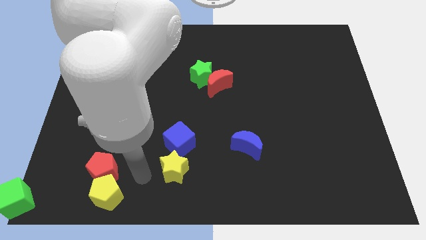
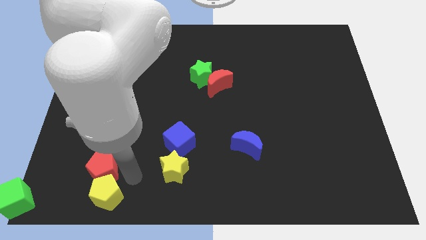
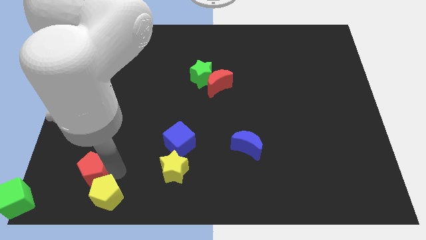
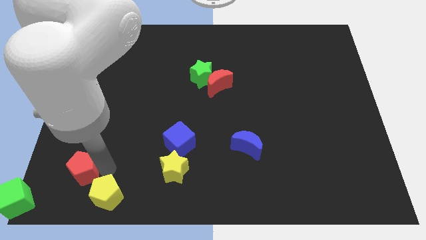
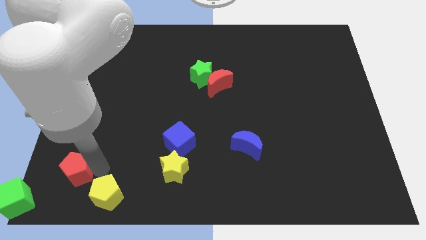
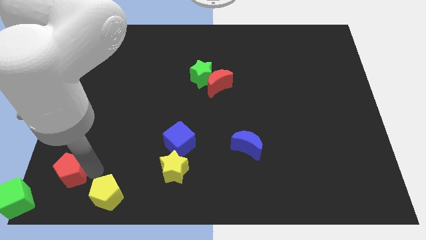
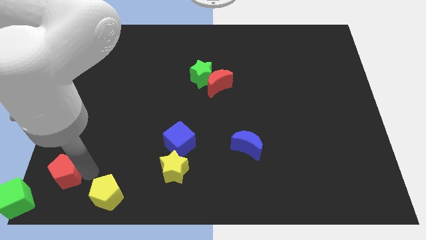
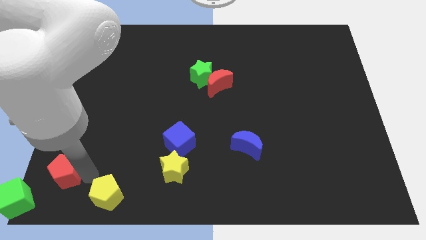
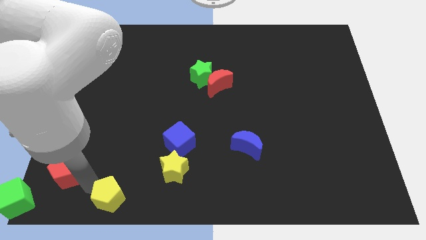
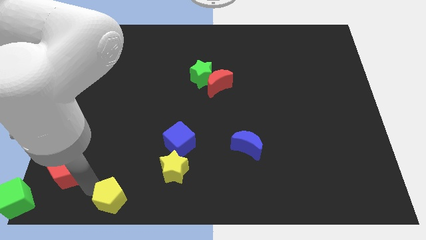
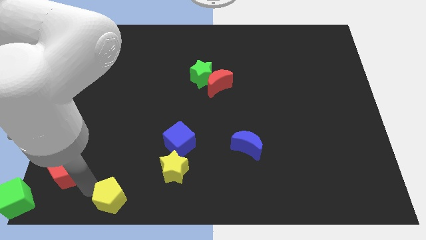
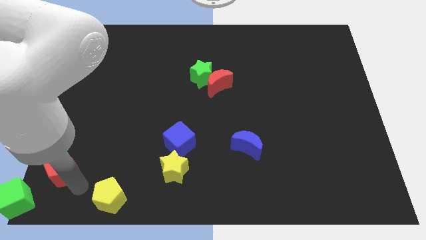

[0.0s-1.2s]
separate the red and yellow pentagons

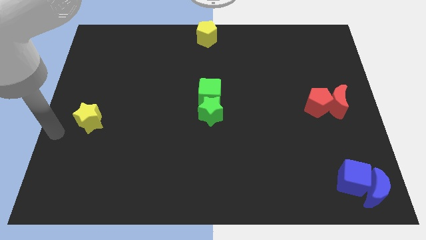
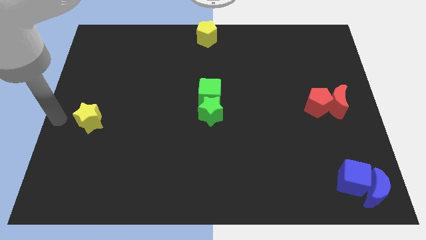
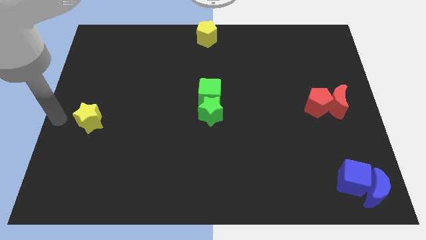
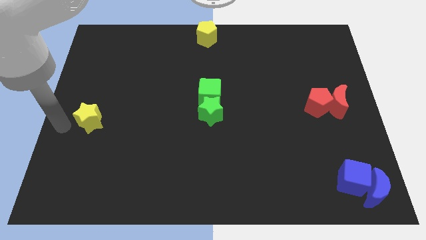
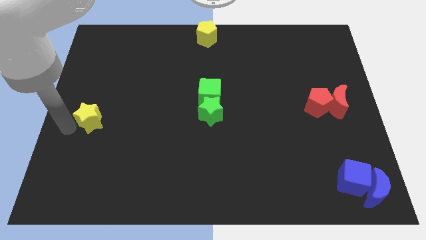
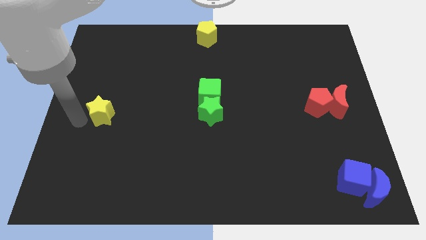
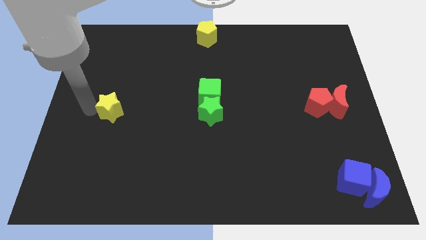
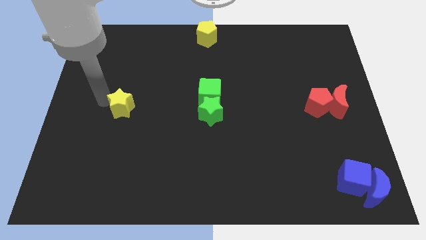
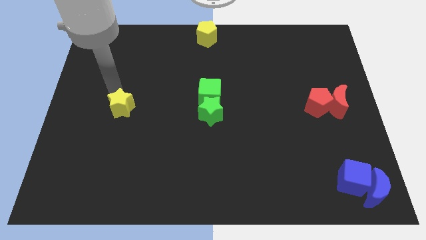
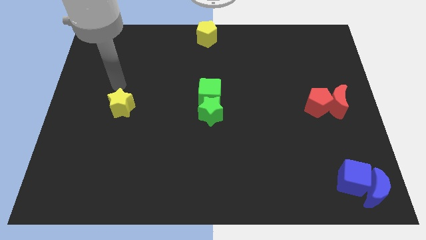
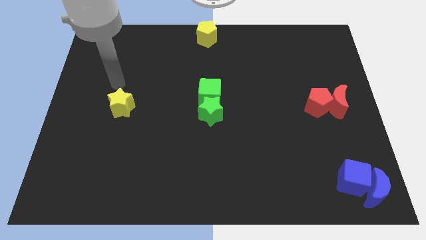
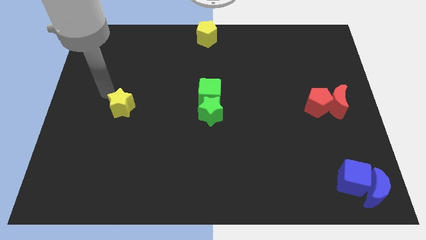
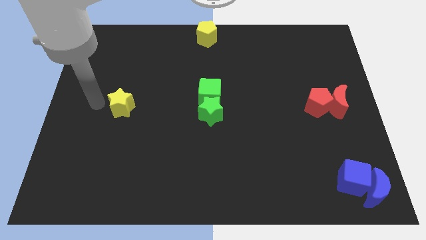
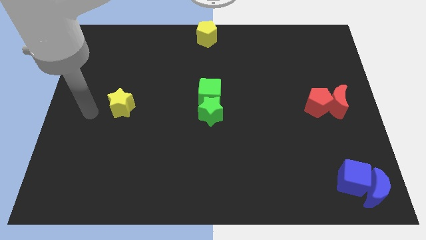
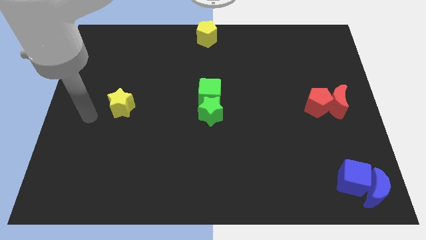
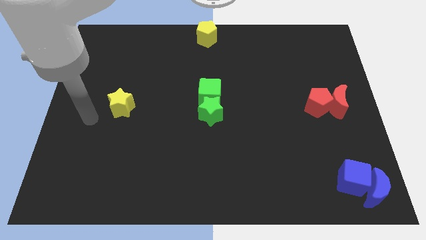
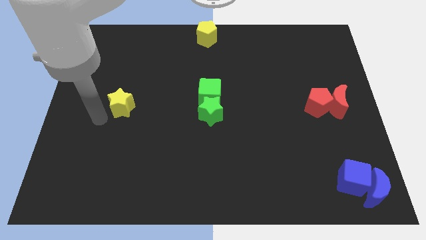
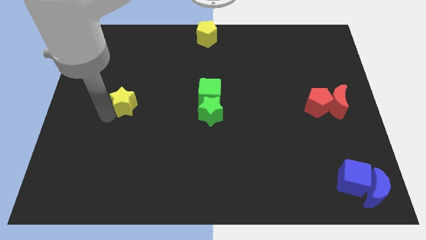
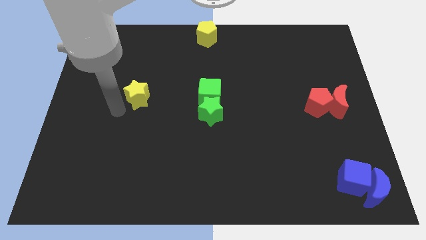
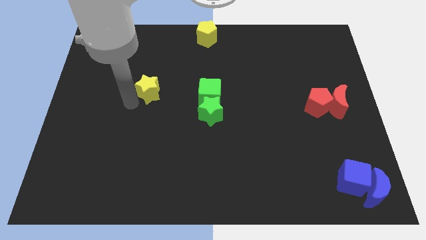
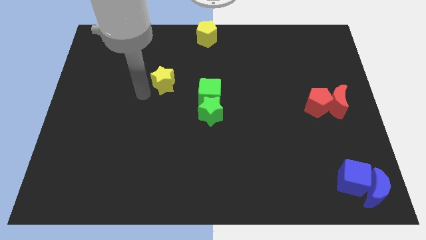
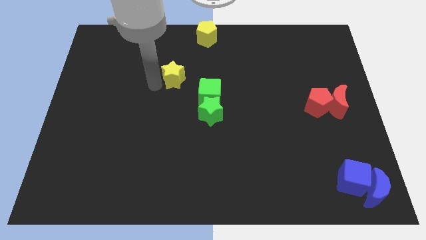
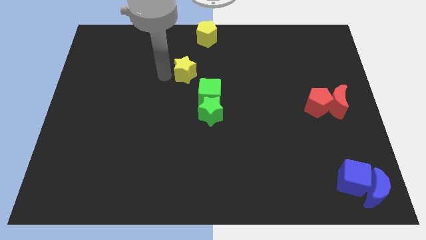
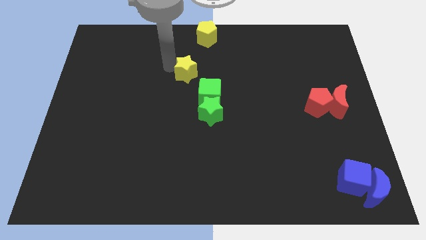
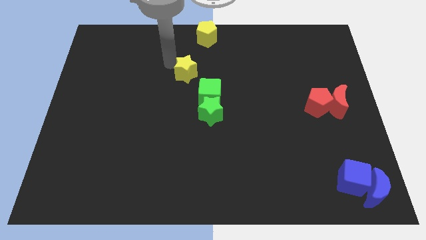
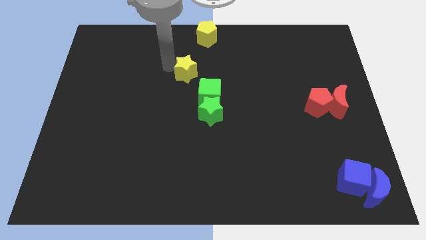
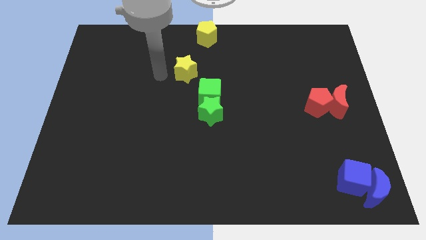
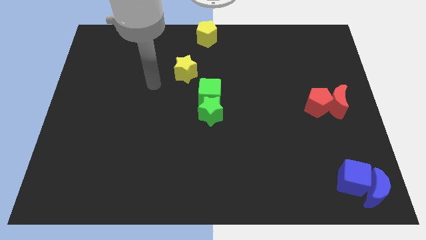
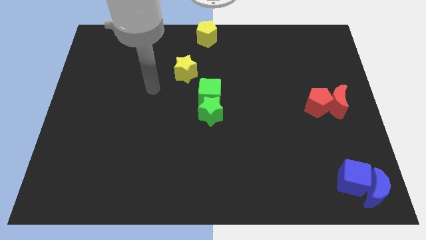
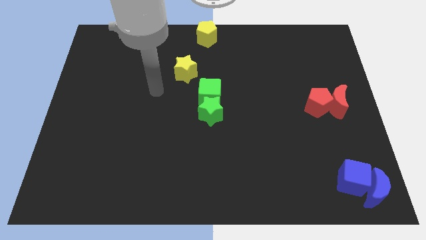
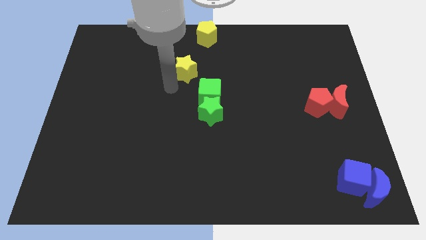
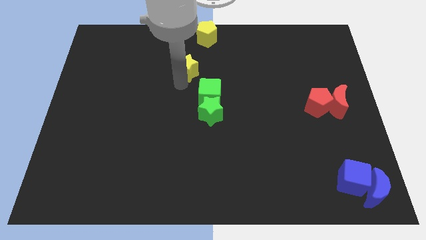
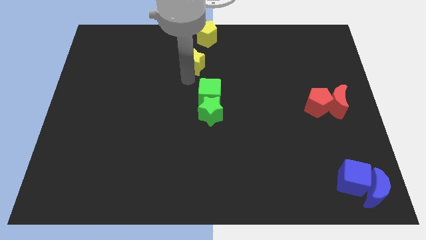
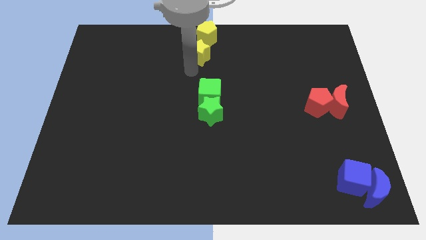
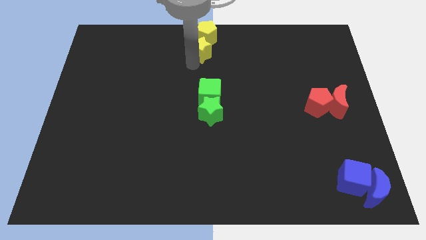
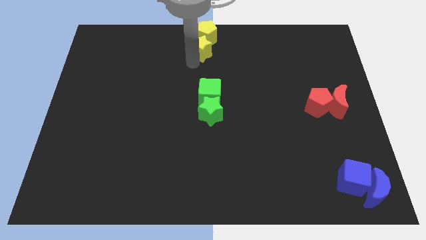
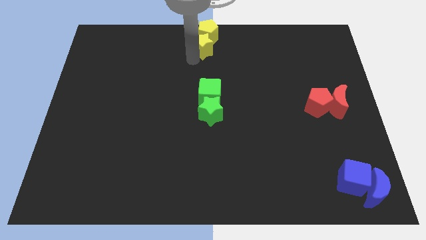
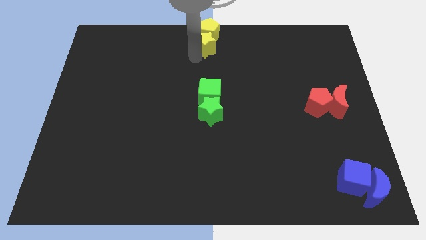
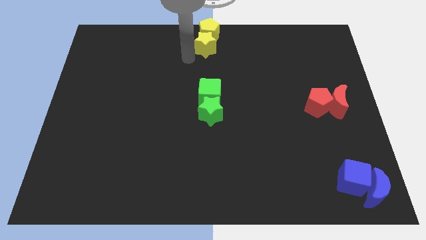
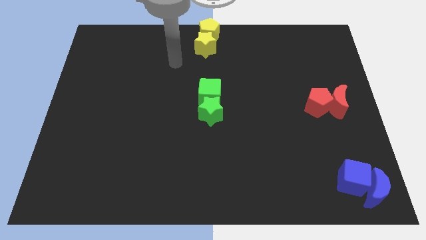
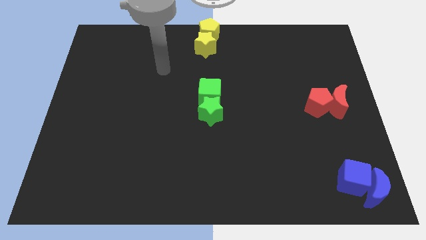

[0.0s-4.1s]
move the yellow star towards the yellow pentagon

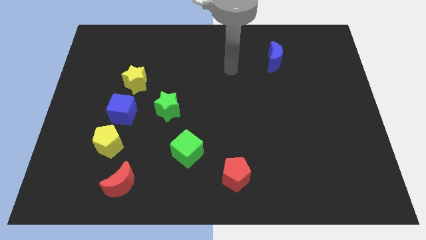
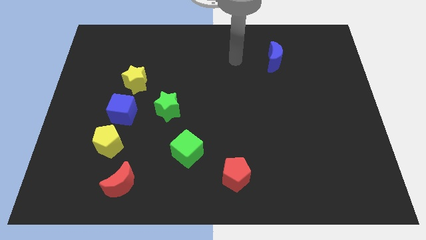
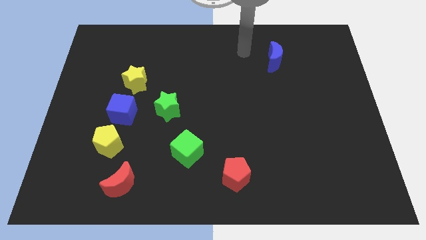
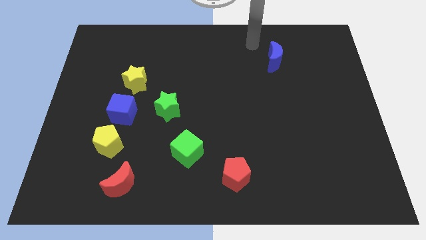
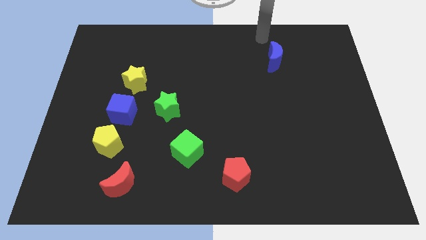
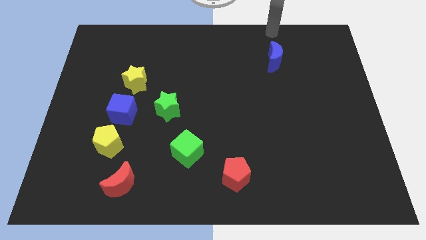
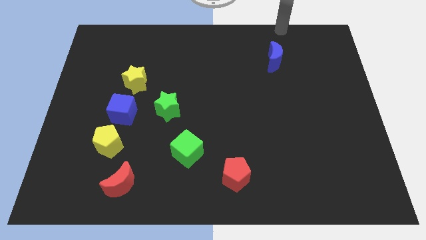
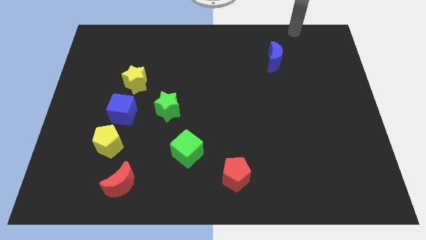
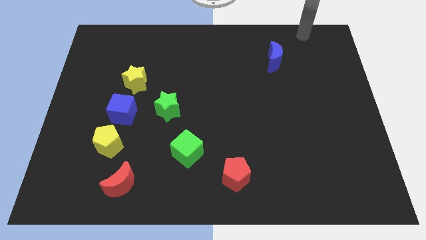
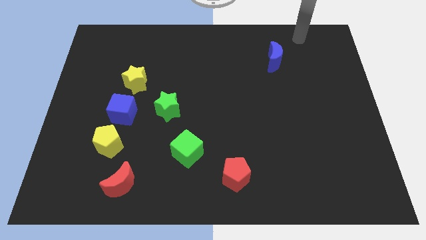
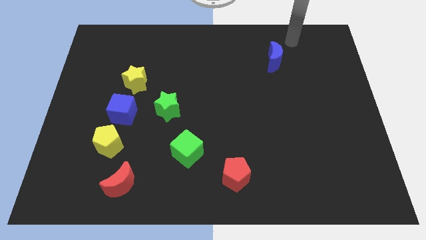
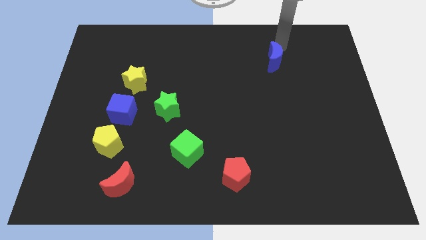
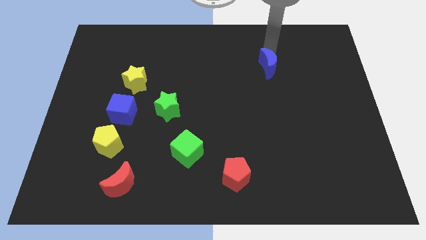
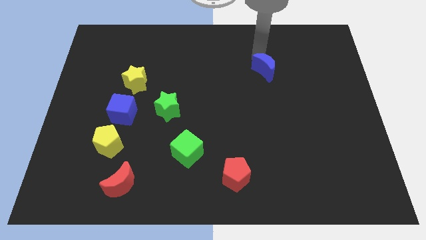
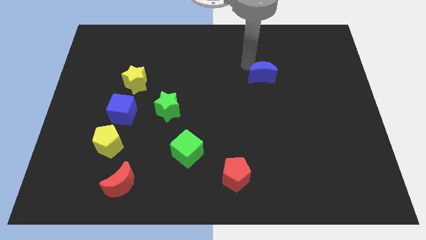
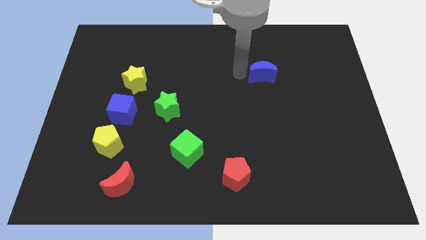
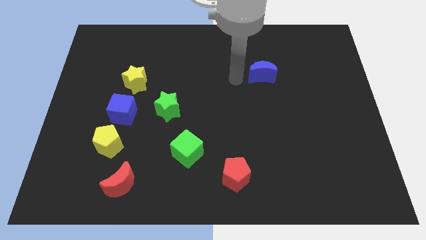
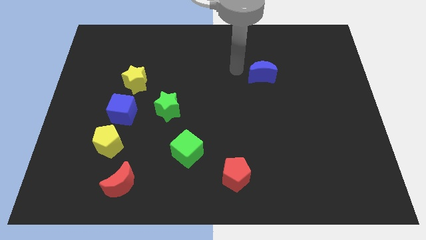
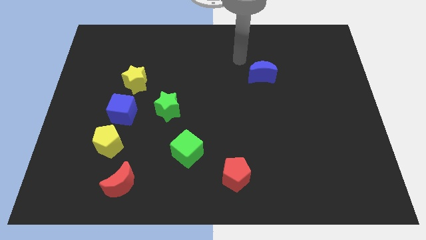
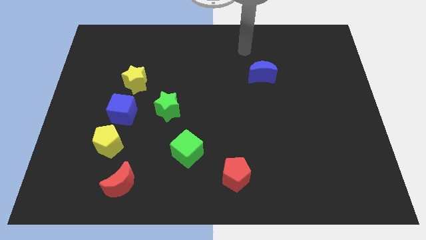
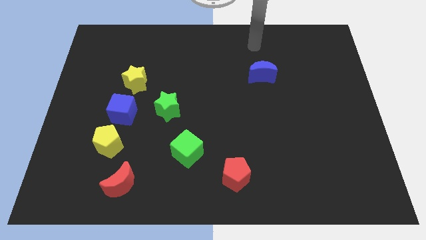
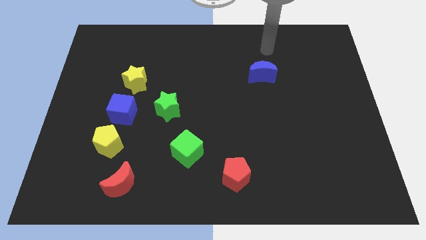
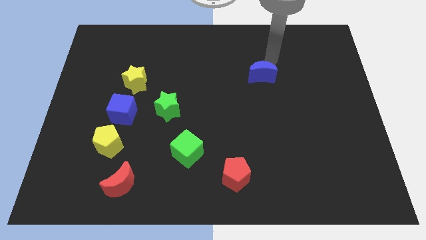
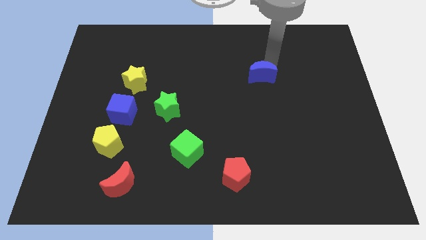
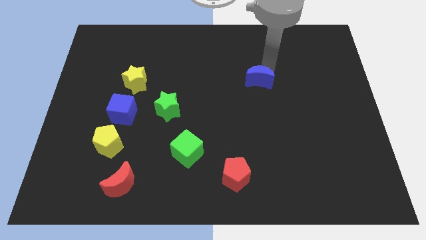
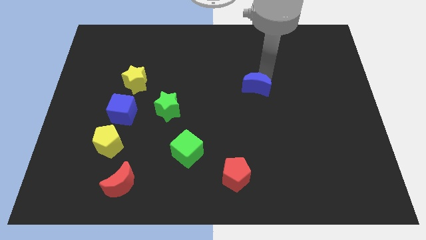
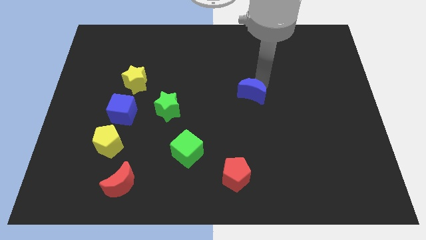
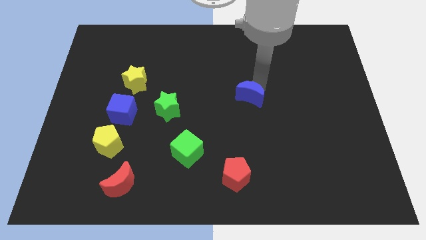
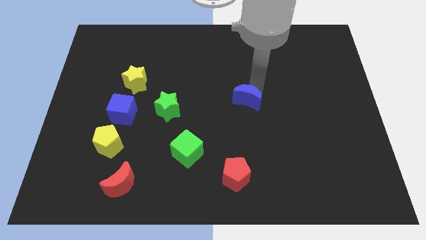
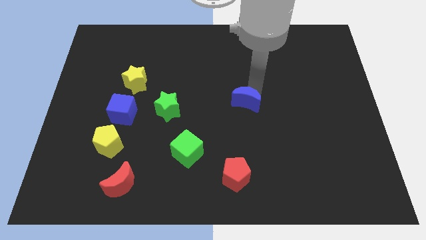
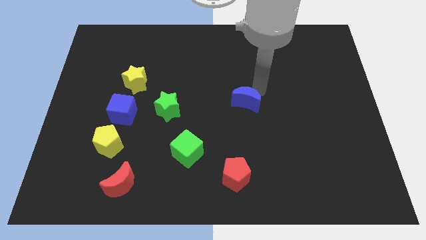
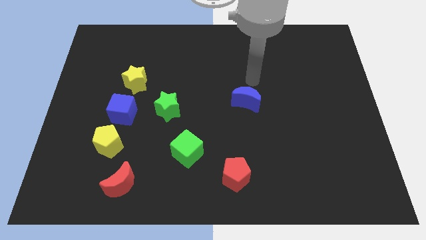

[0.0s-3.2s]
push blue crescent above red pentagon

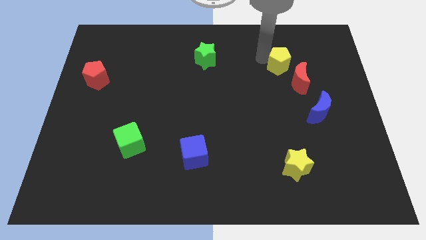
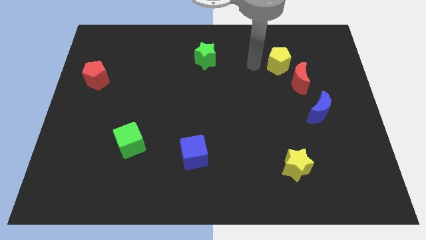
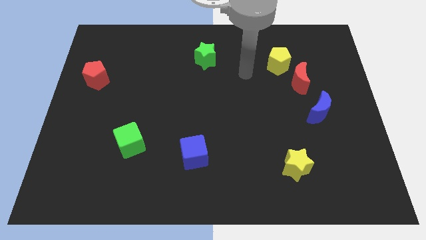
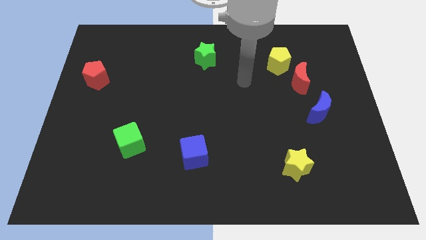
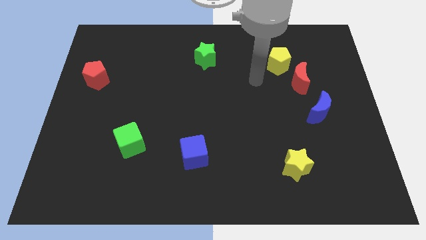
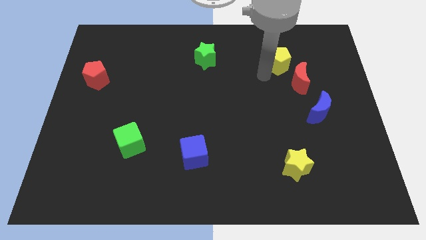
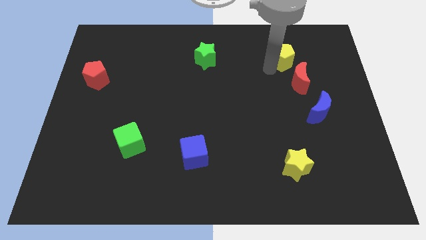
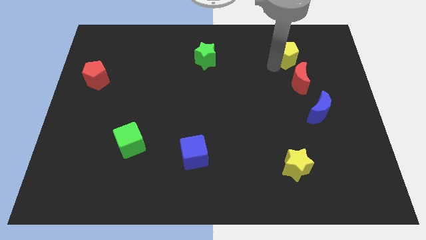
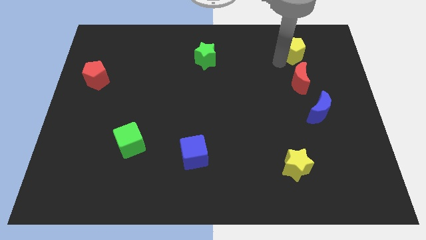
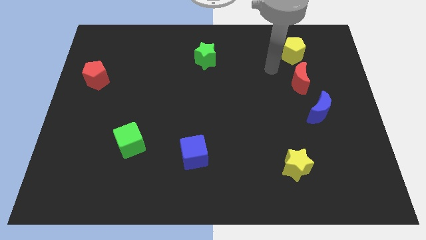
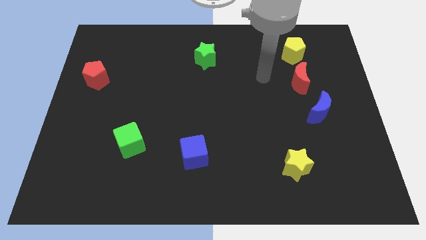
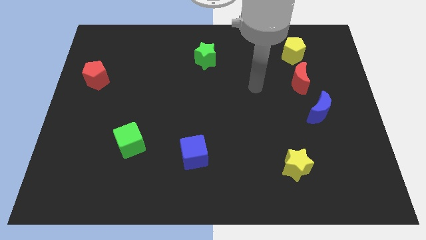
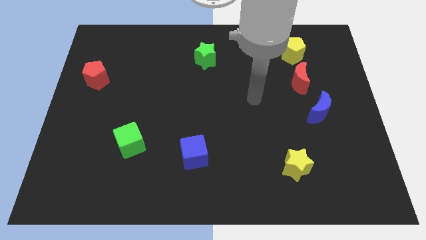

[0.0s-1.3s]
push the yellow pentagon to the top side of the red moon
